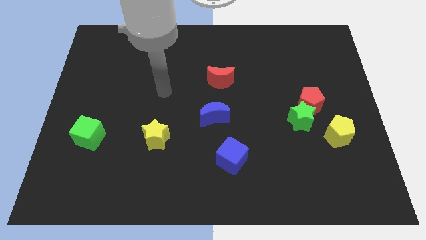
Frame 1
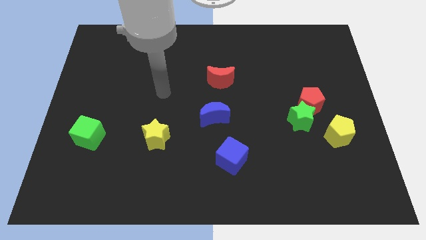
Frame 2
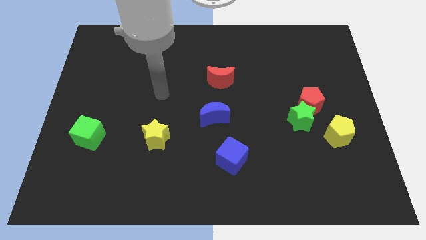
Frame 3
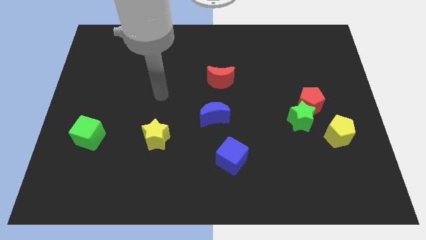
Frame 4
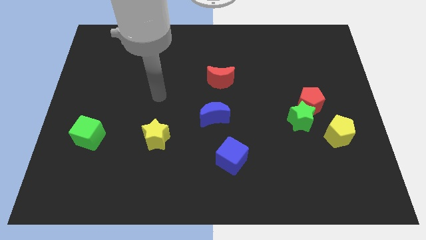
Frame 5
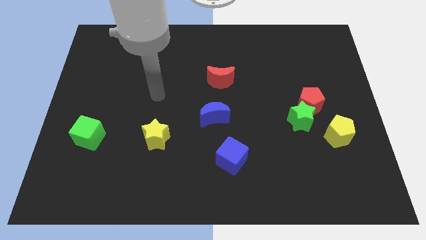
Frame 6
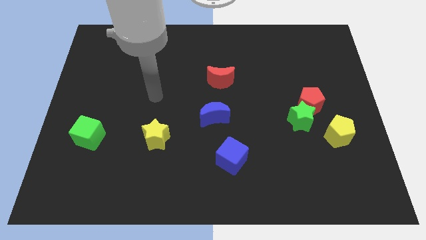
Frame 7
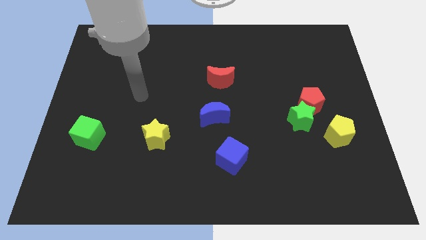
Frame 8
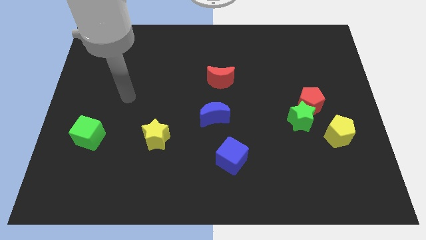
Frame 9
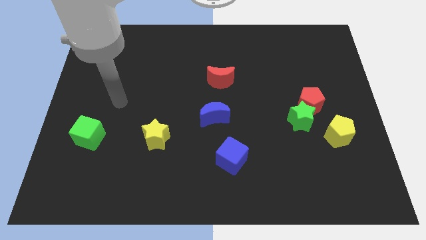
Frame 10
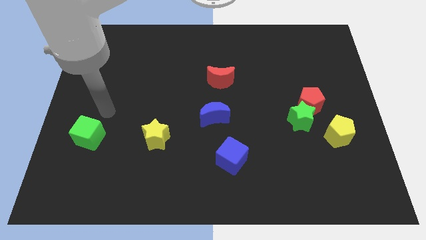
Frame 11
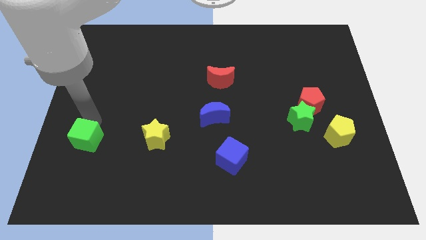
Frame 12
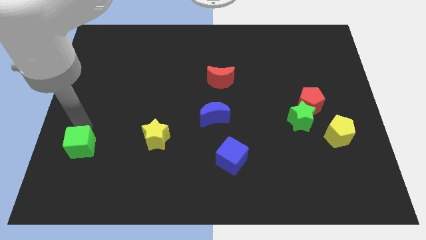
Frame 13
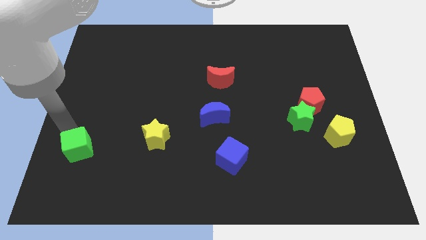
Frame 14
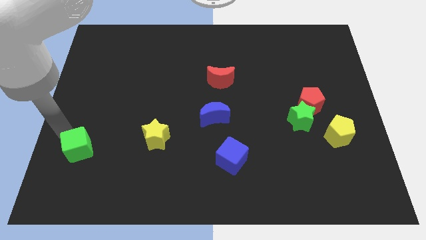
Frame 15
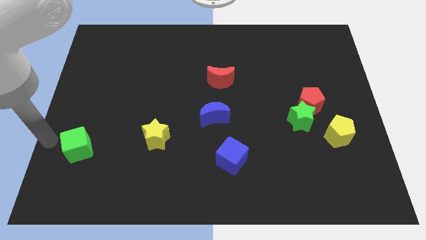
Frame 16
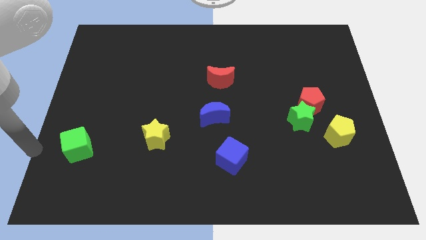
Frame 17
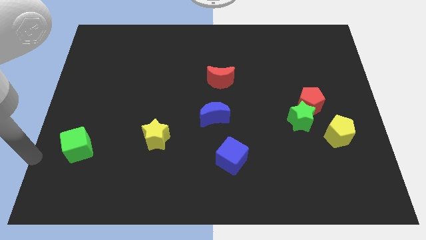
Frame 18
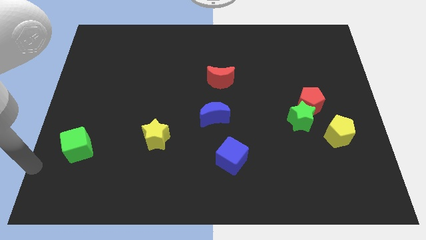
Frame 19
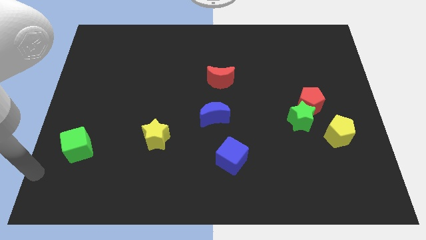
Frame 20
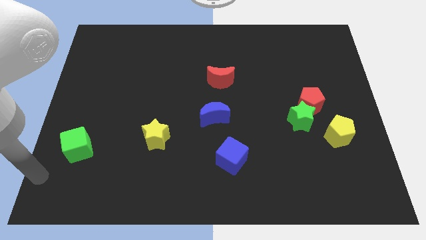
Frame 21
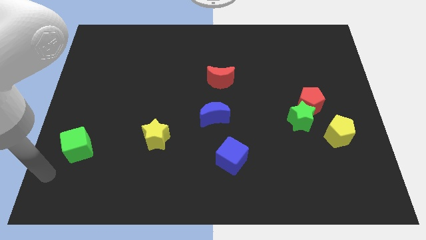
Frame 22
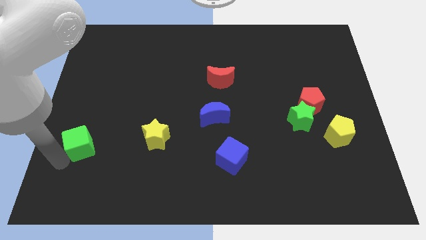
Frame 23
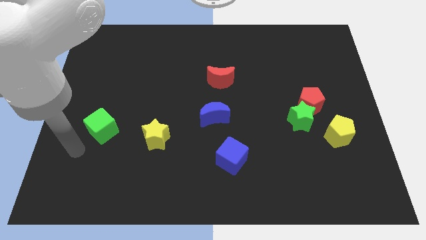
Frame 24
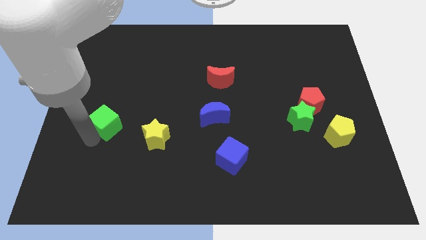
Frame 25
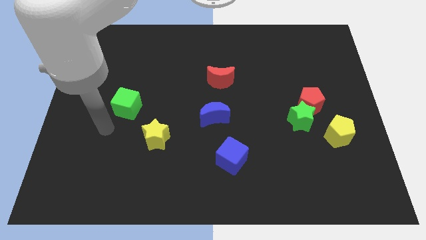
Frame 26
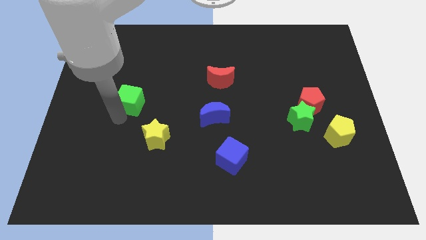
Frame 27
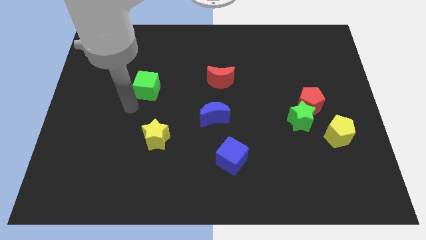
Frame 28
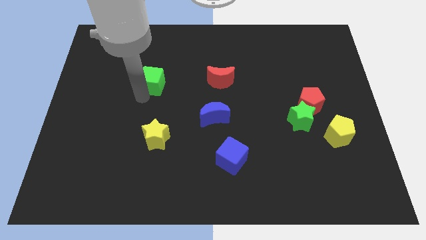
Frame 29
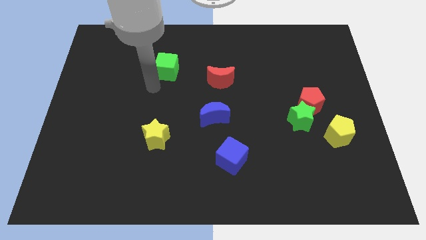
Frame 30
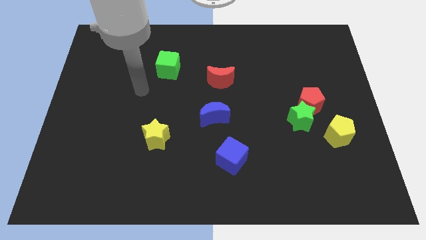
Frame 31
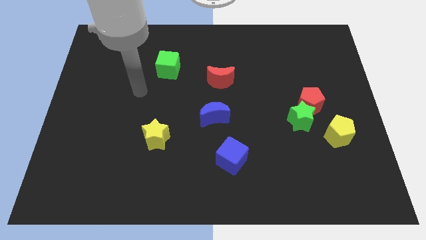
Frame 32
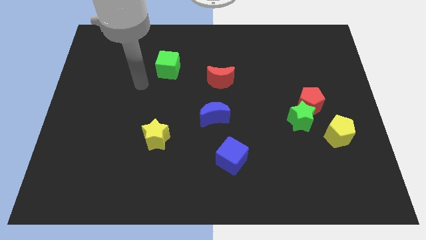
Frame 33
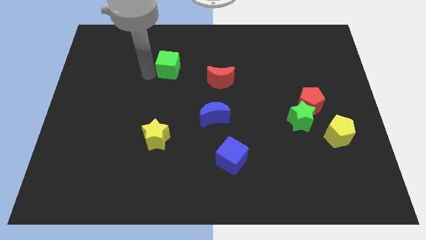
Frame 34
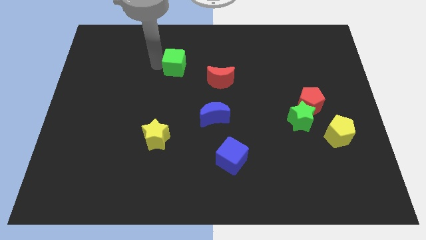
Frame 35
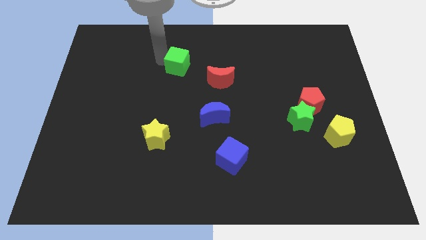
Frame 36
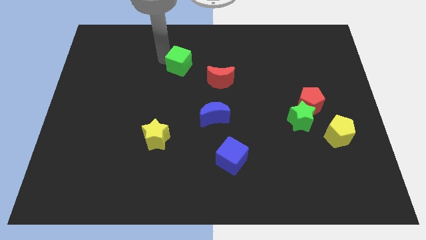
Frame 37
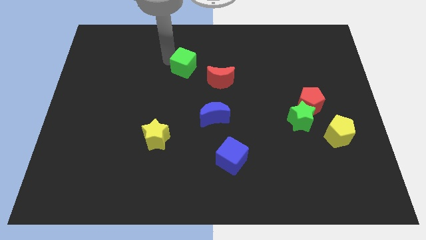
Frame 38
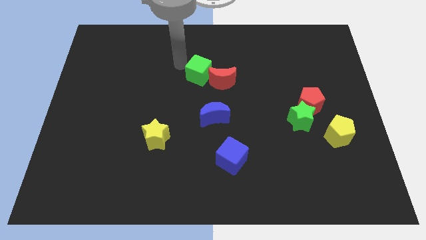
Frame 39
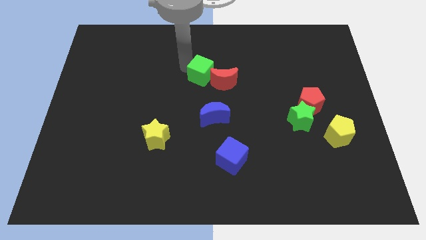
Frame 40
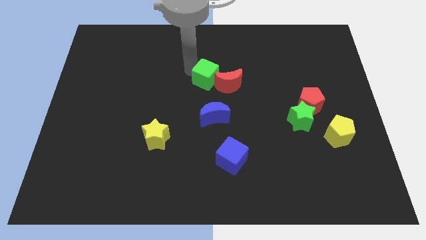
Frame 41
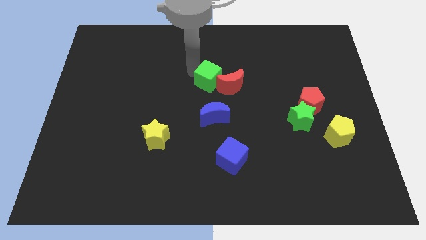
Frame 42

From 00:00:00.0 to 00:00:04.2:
push the green cube into the red moon

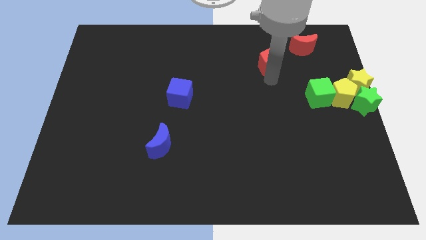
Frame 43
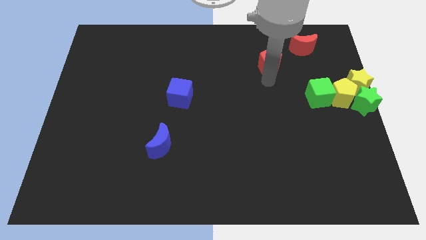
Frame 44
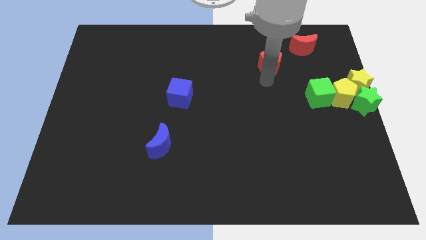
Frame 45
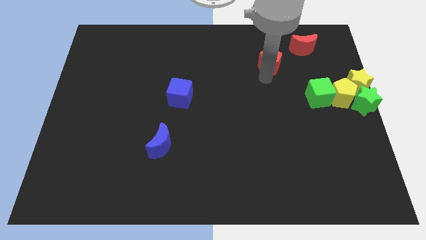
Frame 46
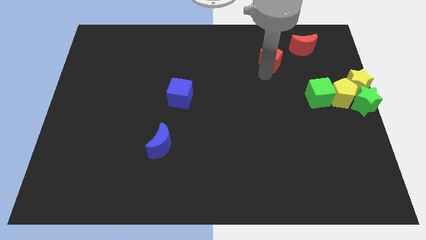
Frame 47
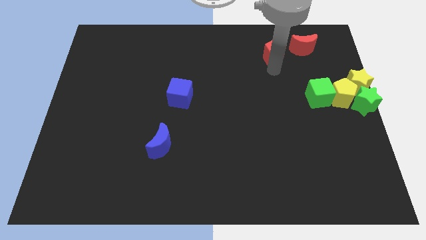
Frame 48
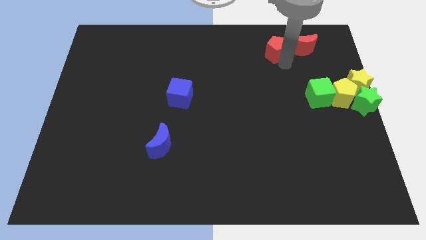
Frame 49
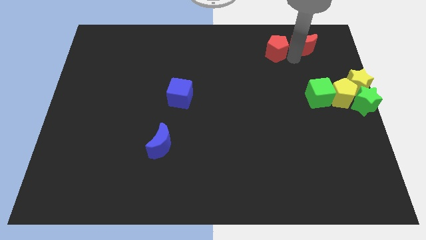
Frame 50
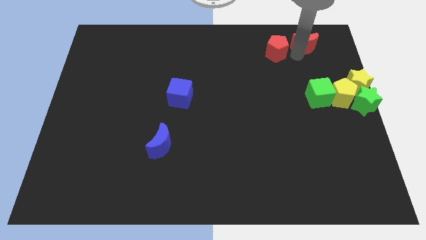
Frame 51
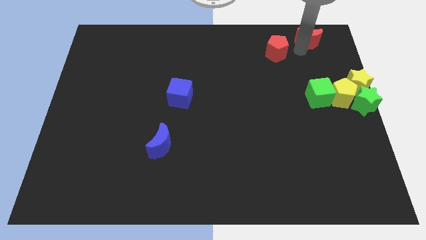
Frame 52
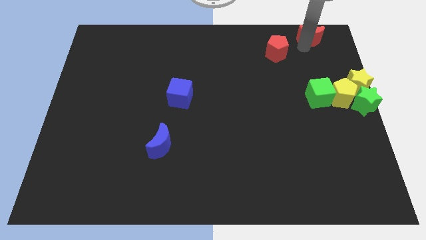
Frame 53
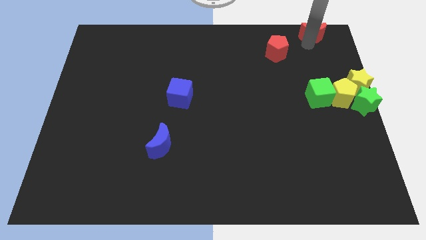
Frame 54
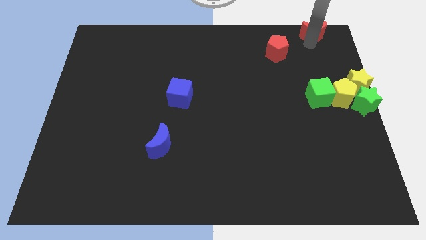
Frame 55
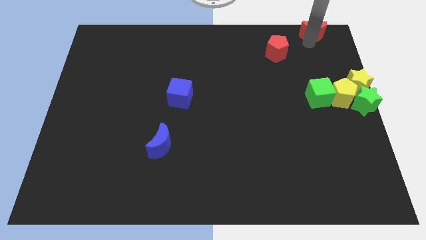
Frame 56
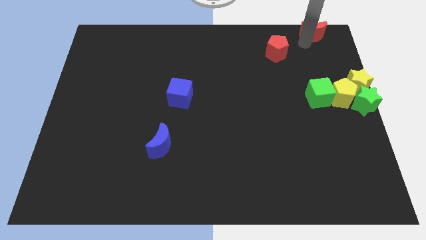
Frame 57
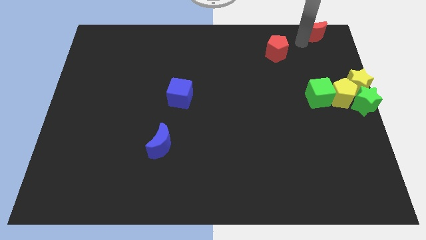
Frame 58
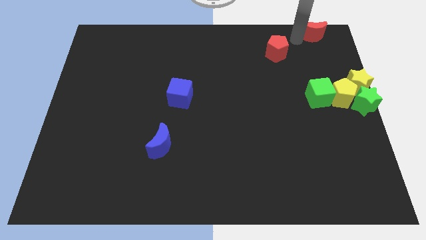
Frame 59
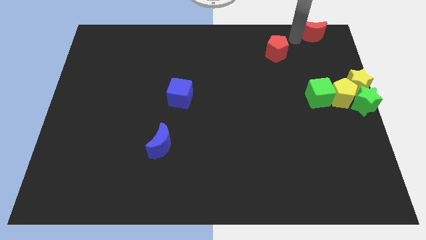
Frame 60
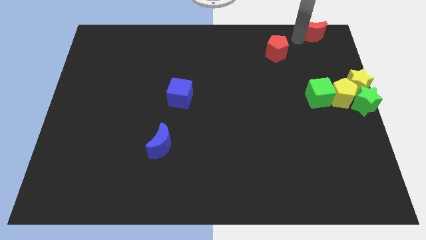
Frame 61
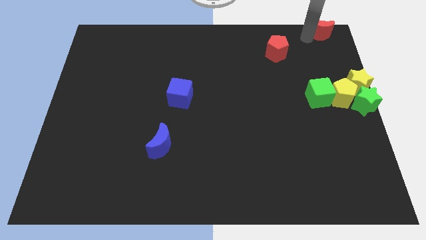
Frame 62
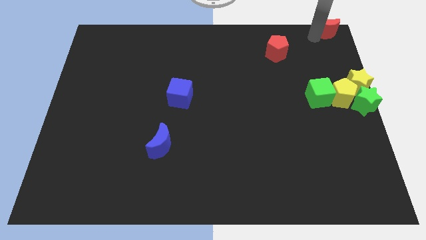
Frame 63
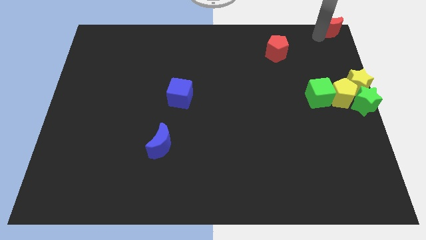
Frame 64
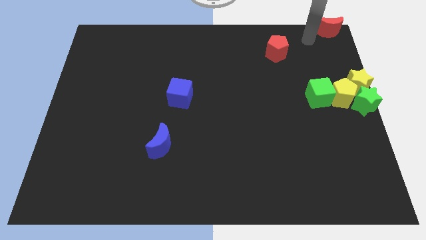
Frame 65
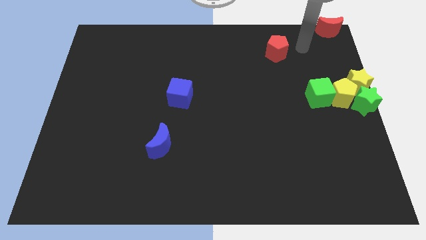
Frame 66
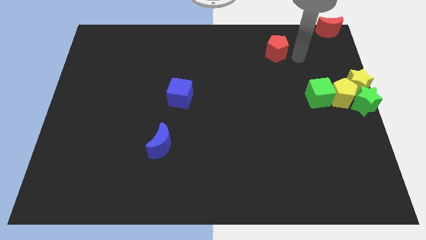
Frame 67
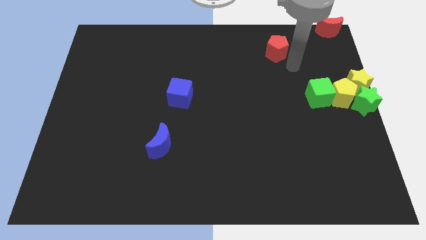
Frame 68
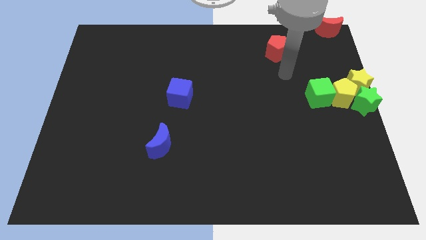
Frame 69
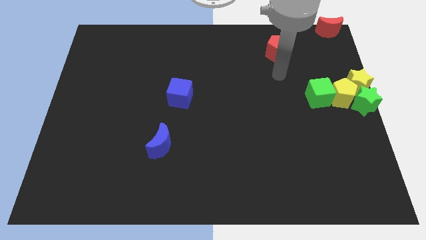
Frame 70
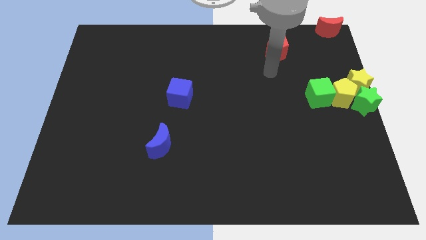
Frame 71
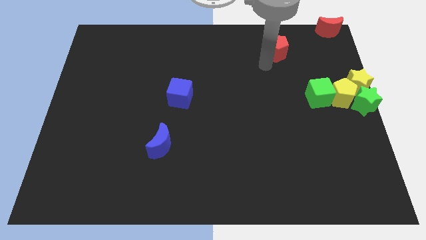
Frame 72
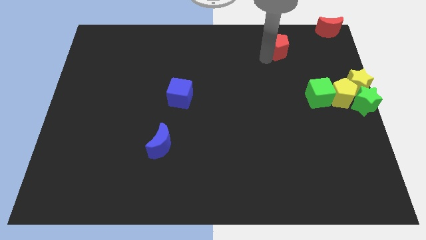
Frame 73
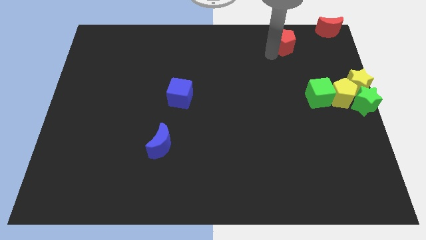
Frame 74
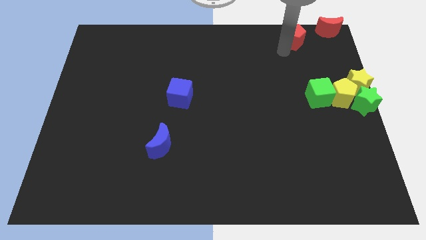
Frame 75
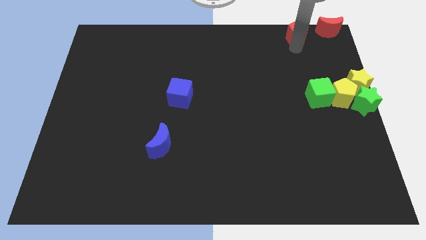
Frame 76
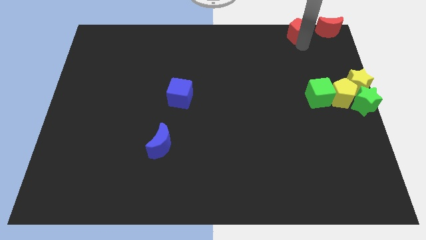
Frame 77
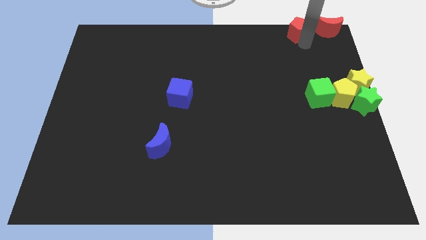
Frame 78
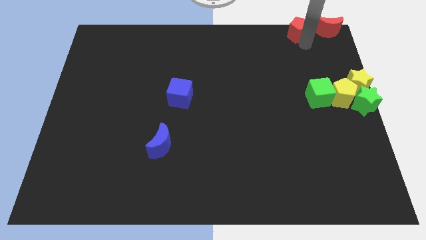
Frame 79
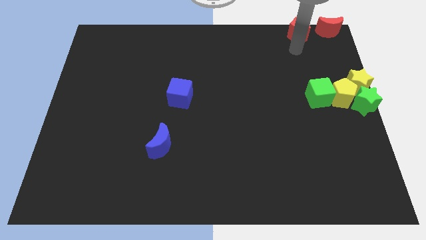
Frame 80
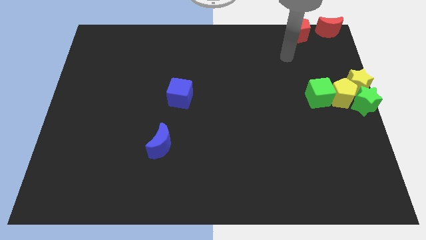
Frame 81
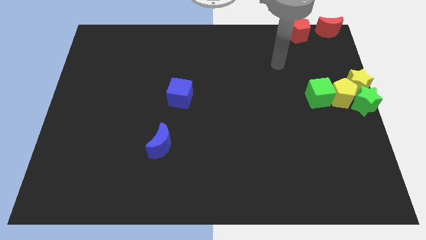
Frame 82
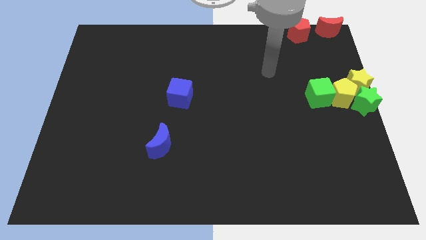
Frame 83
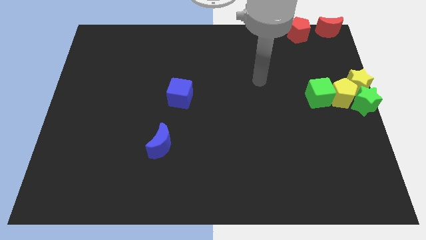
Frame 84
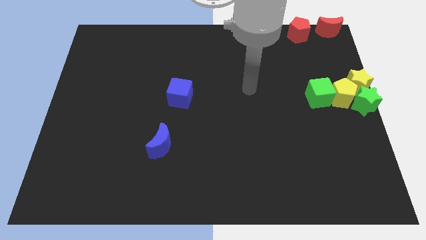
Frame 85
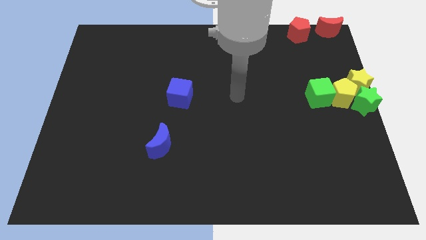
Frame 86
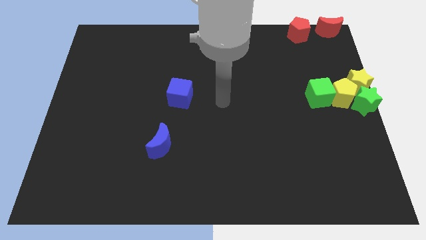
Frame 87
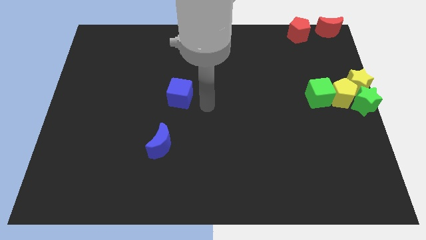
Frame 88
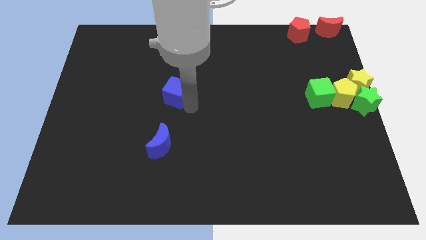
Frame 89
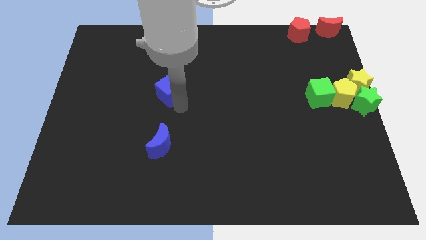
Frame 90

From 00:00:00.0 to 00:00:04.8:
move the red blocks to the top red corner of the board

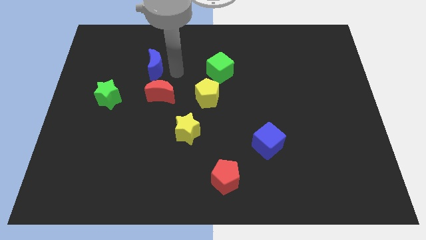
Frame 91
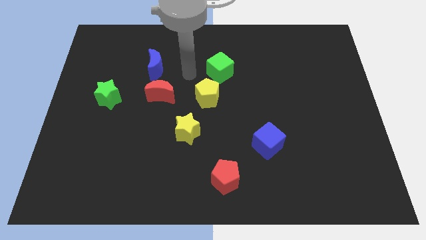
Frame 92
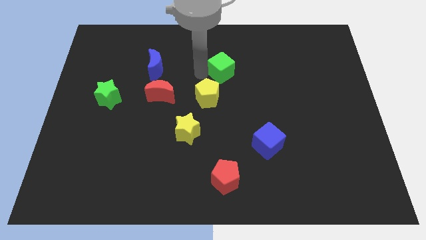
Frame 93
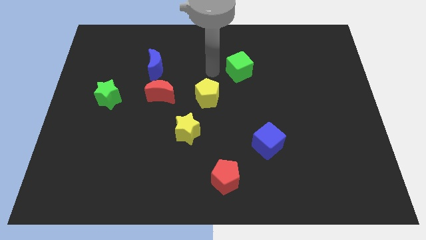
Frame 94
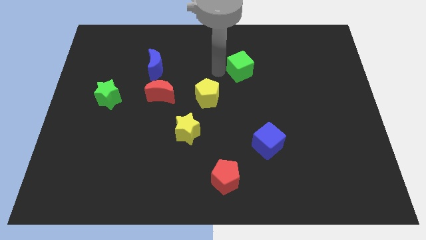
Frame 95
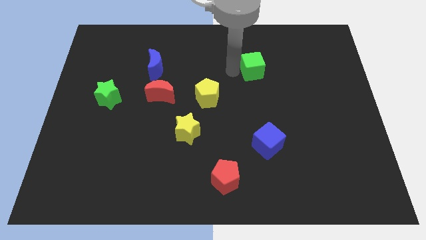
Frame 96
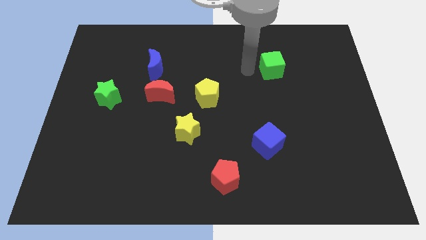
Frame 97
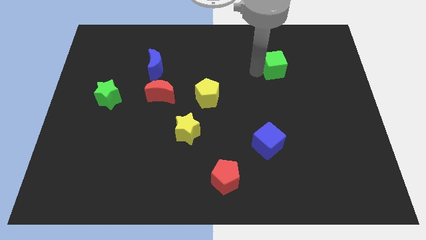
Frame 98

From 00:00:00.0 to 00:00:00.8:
place green cube vertically above blue cube
